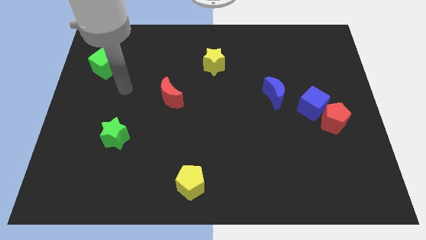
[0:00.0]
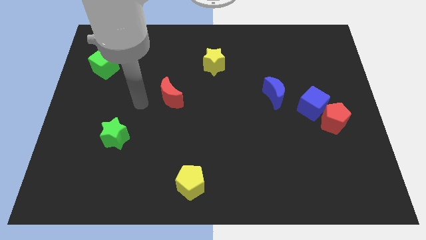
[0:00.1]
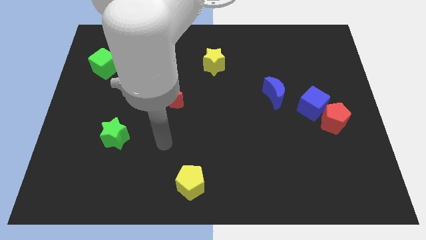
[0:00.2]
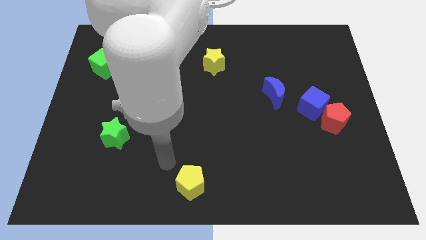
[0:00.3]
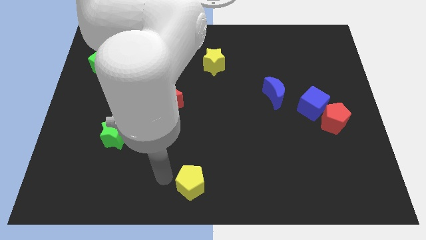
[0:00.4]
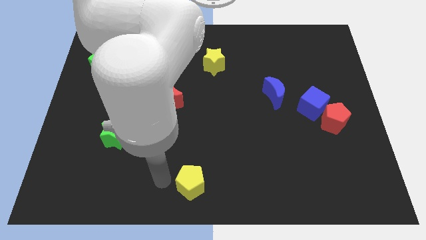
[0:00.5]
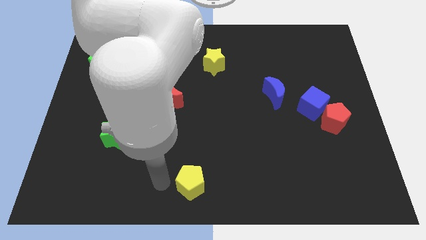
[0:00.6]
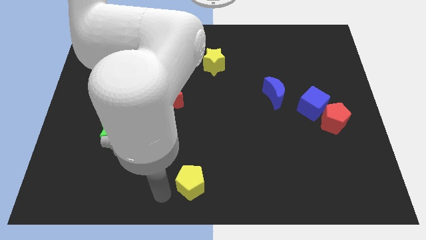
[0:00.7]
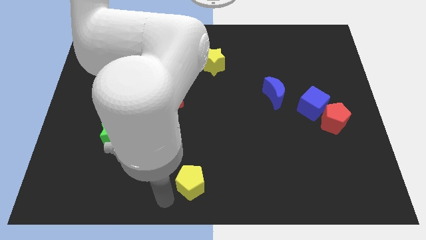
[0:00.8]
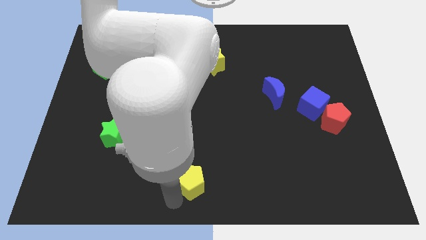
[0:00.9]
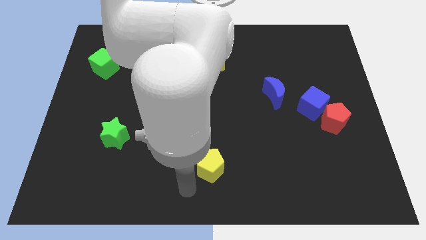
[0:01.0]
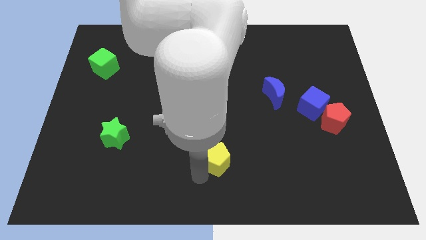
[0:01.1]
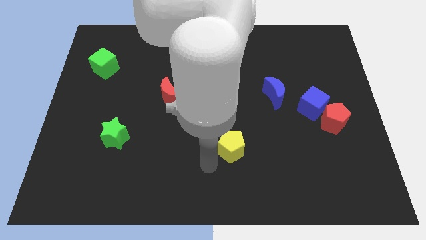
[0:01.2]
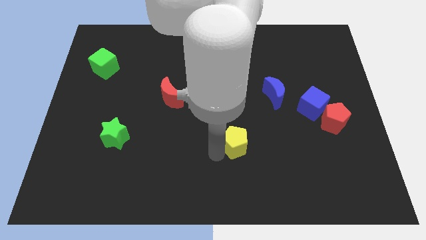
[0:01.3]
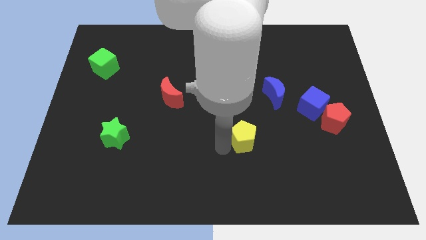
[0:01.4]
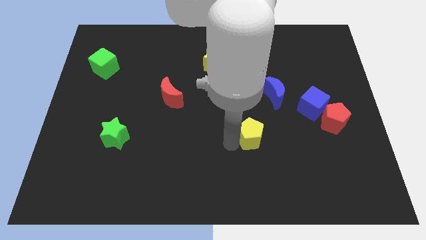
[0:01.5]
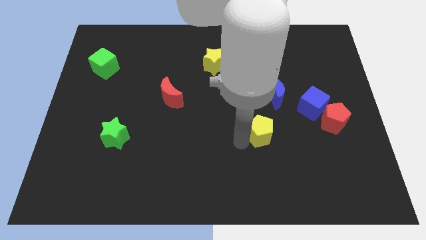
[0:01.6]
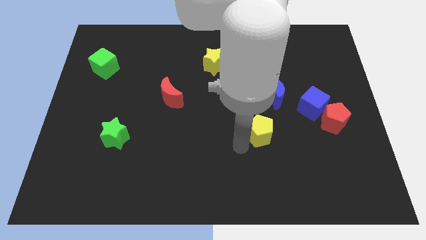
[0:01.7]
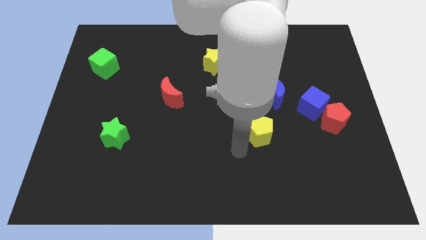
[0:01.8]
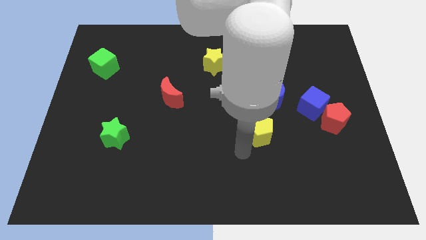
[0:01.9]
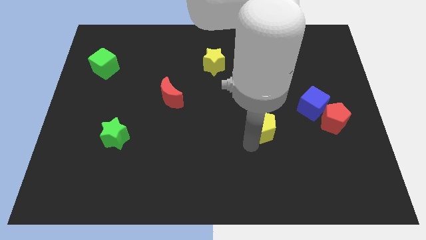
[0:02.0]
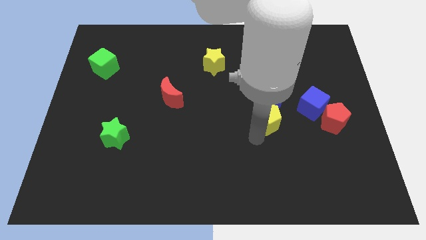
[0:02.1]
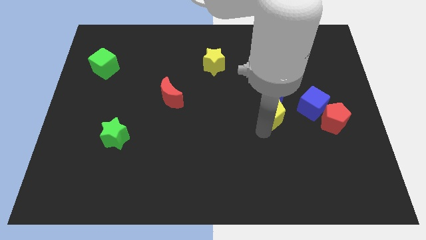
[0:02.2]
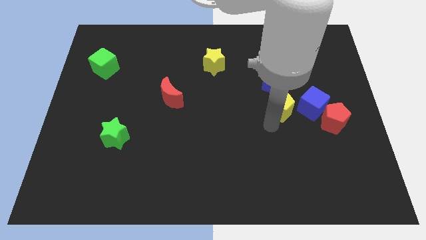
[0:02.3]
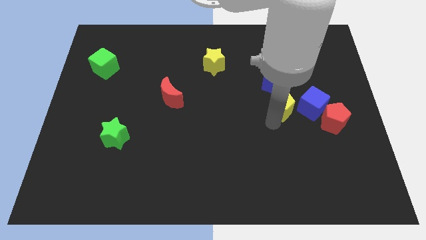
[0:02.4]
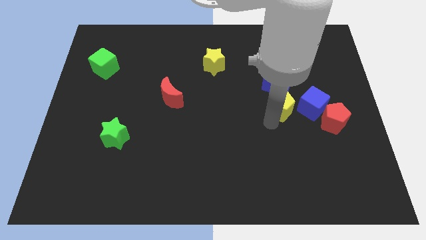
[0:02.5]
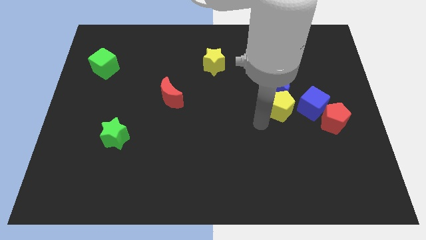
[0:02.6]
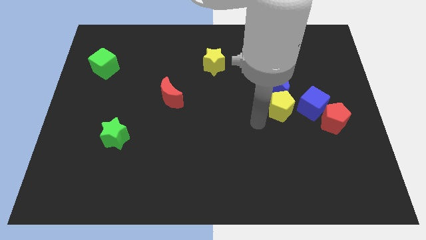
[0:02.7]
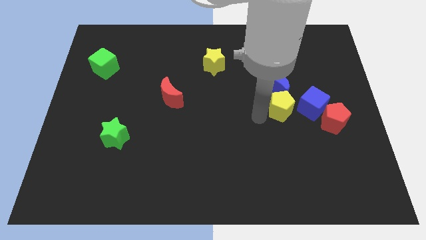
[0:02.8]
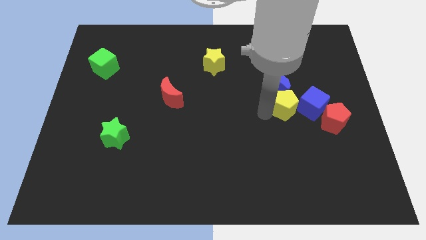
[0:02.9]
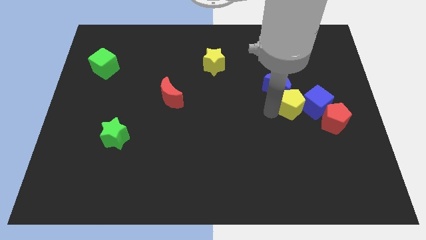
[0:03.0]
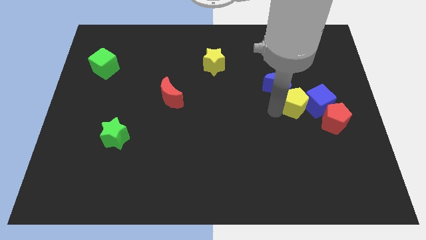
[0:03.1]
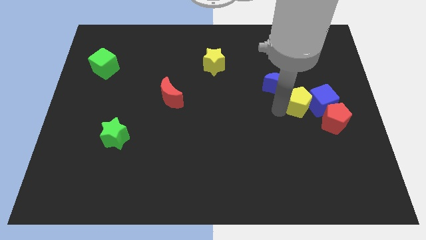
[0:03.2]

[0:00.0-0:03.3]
move the yellow pentagon to the blue cube

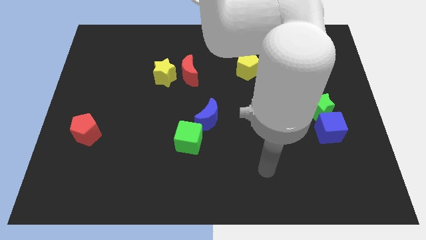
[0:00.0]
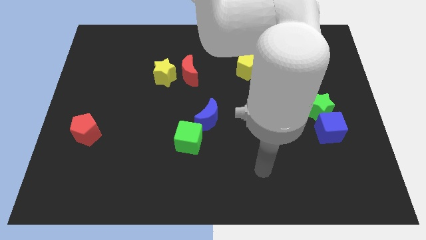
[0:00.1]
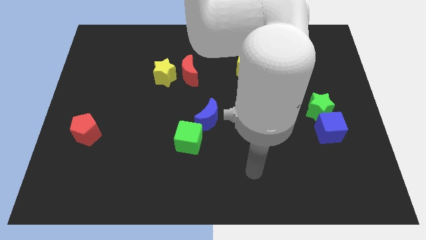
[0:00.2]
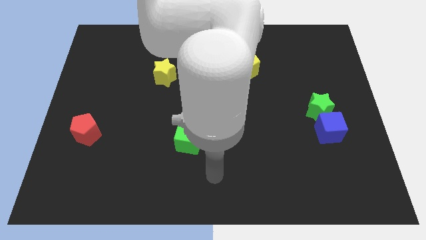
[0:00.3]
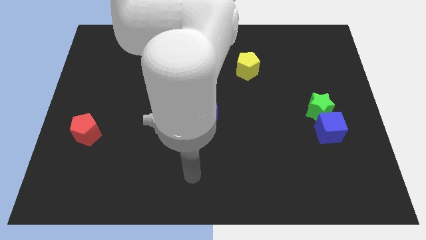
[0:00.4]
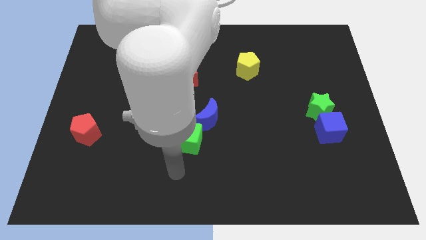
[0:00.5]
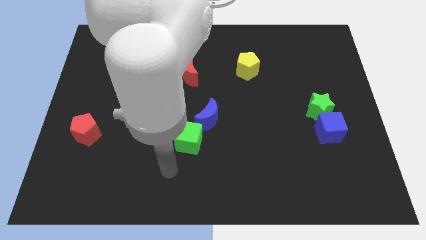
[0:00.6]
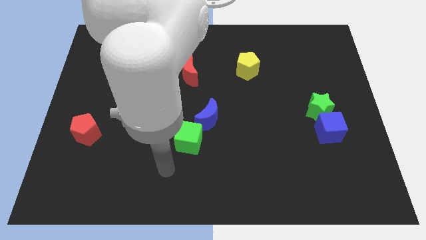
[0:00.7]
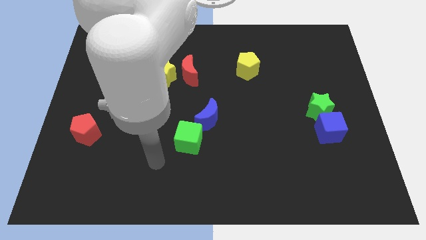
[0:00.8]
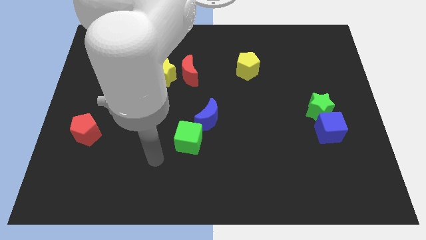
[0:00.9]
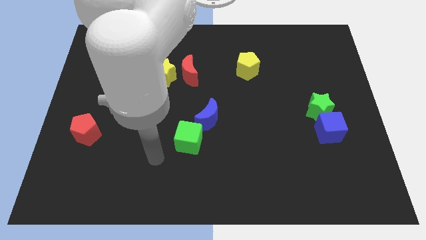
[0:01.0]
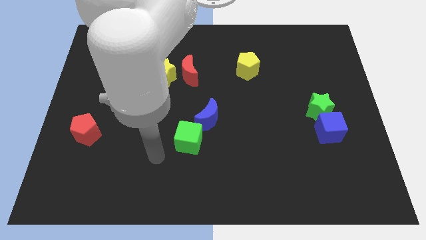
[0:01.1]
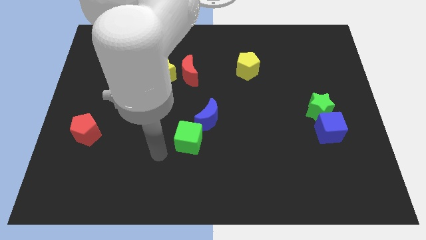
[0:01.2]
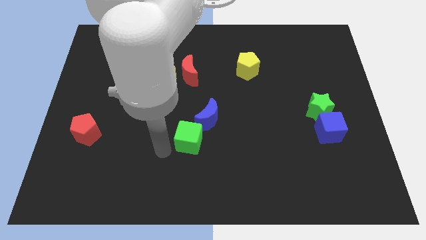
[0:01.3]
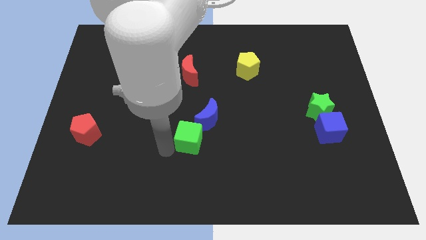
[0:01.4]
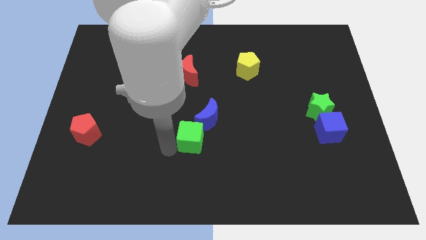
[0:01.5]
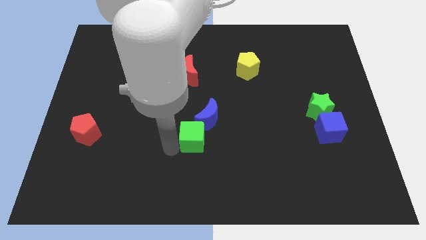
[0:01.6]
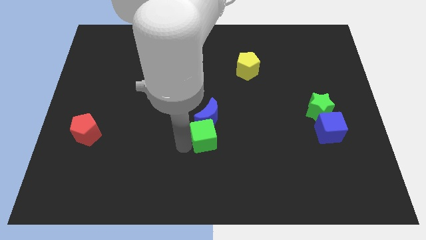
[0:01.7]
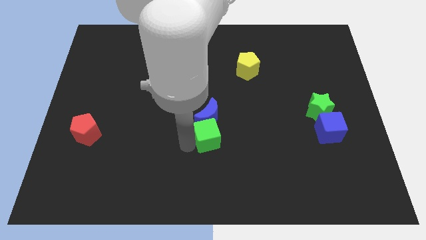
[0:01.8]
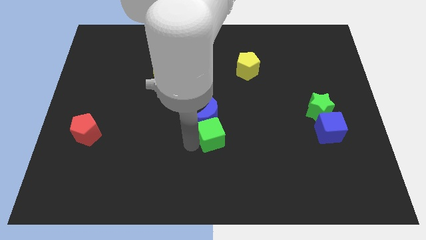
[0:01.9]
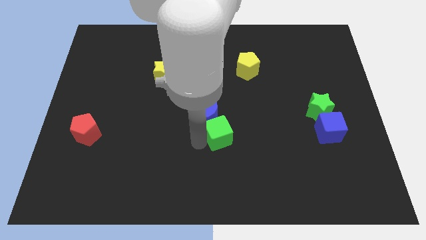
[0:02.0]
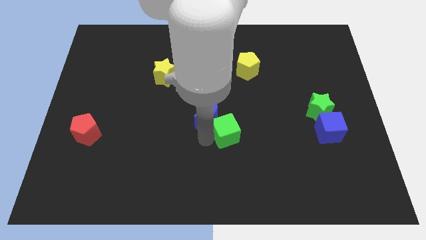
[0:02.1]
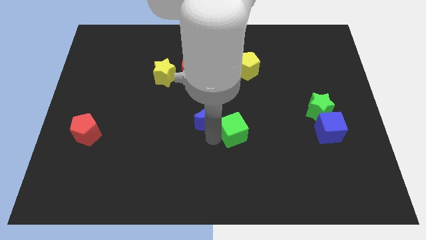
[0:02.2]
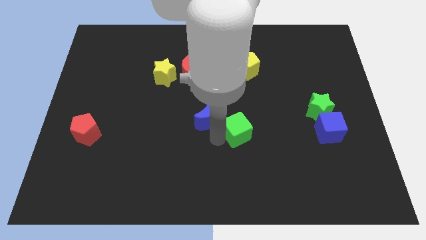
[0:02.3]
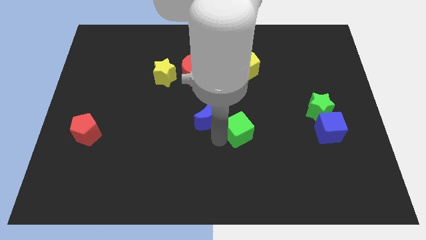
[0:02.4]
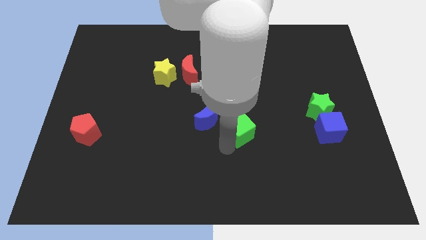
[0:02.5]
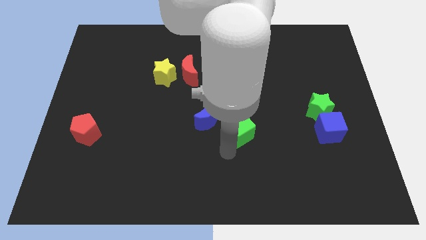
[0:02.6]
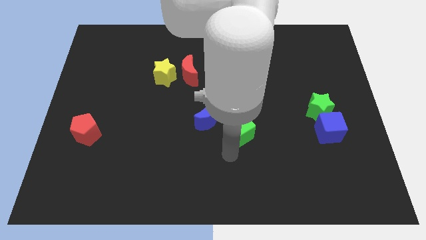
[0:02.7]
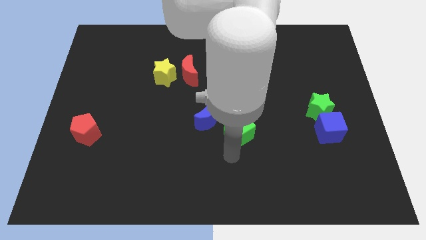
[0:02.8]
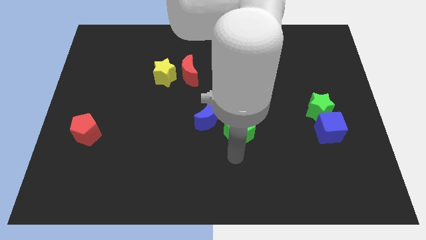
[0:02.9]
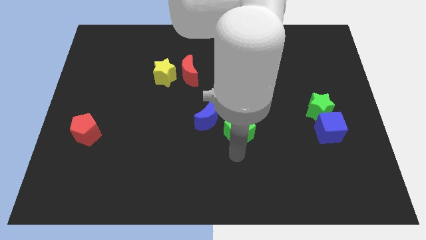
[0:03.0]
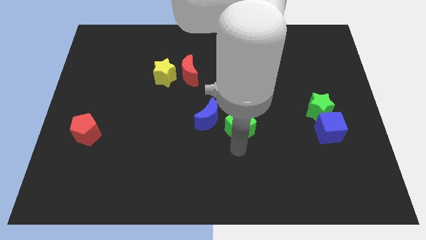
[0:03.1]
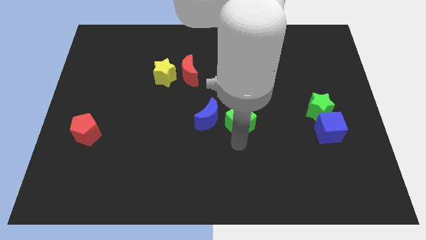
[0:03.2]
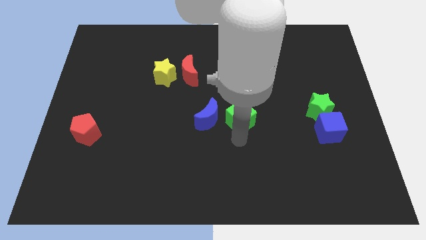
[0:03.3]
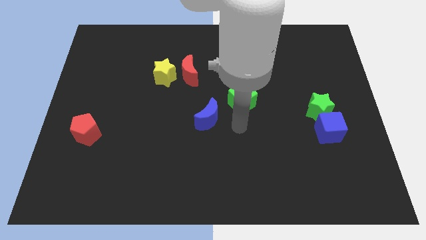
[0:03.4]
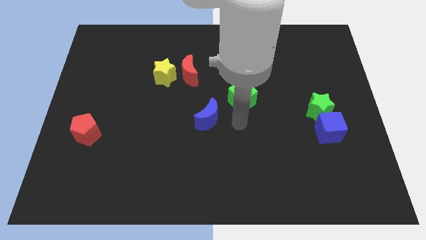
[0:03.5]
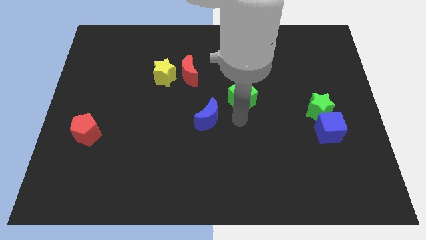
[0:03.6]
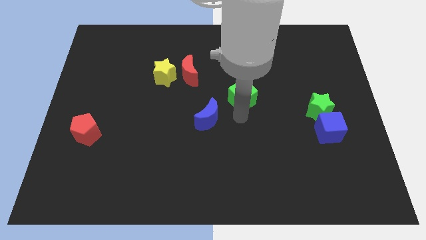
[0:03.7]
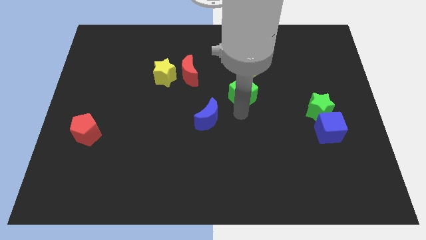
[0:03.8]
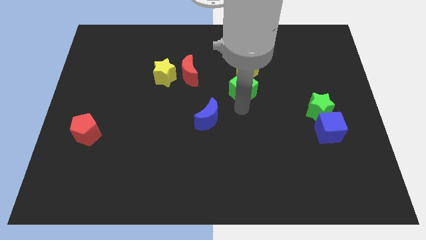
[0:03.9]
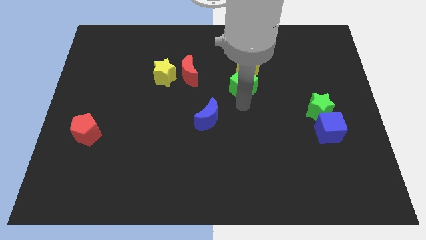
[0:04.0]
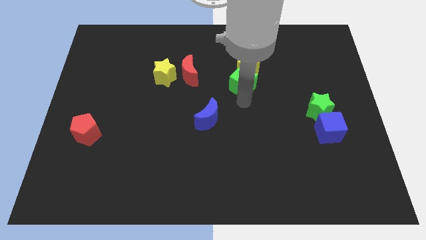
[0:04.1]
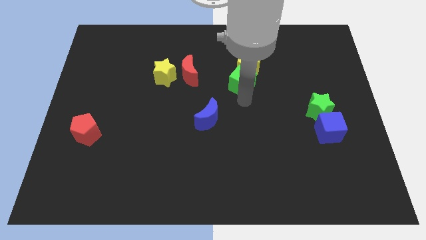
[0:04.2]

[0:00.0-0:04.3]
slide the green cube next to the yellow pentagon

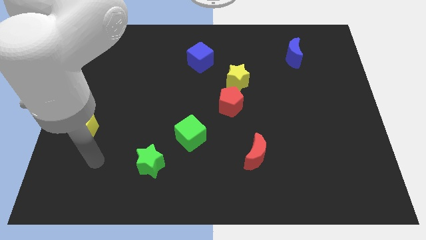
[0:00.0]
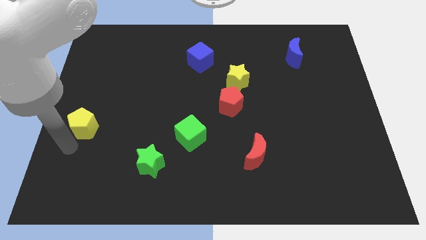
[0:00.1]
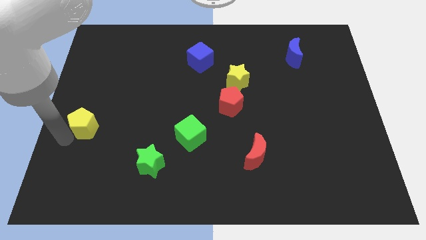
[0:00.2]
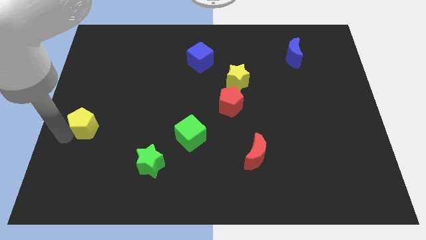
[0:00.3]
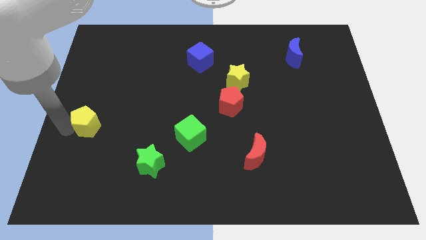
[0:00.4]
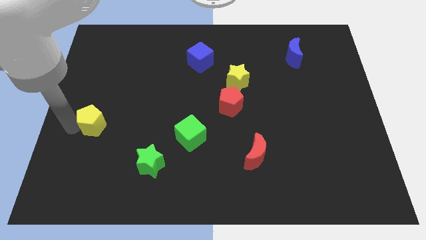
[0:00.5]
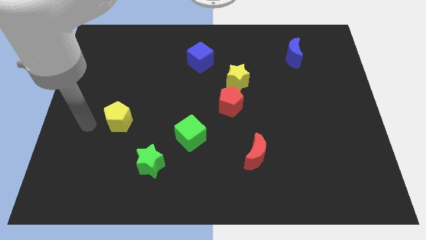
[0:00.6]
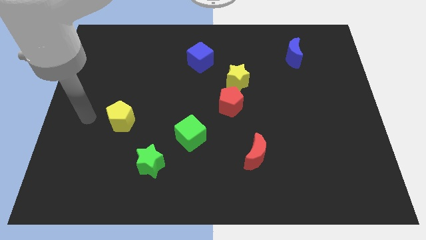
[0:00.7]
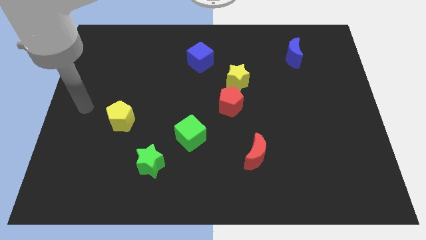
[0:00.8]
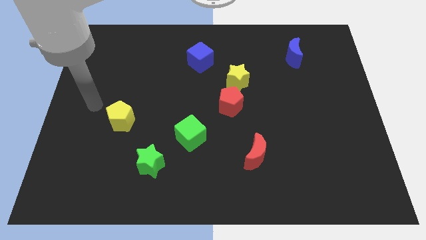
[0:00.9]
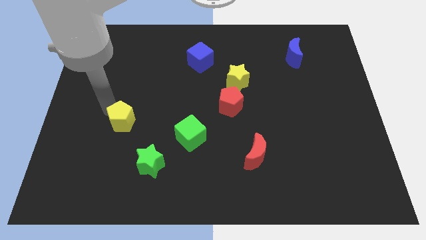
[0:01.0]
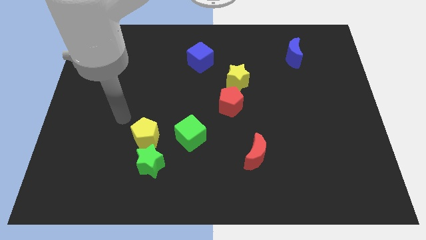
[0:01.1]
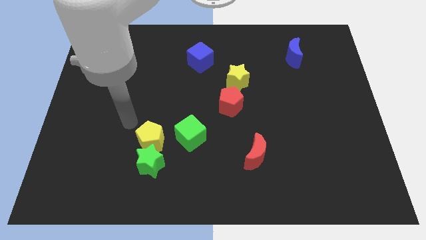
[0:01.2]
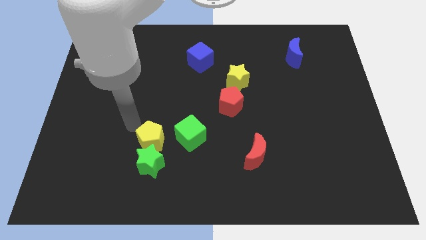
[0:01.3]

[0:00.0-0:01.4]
put the yellow pentagon towards the green star
